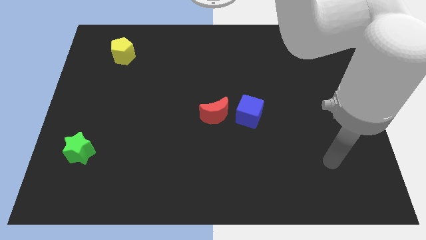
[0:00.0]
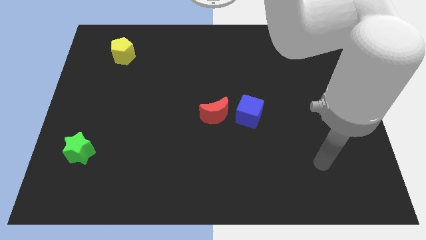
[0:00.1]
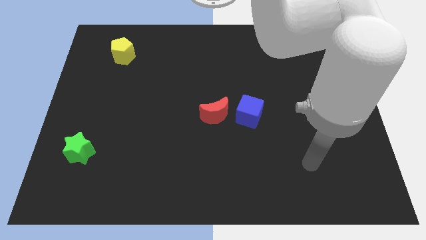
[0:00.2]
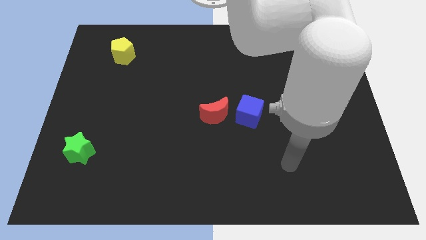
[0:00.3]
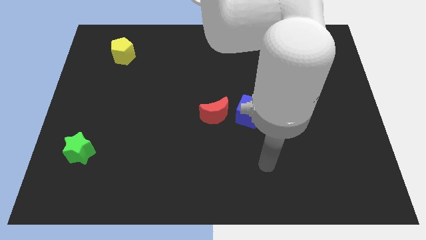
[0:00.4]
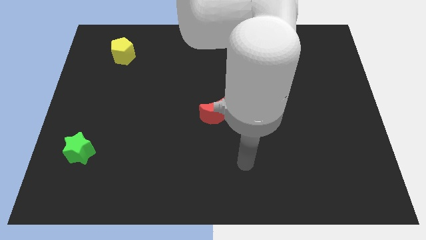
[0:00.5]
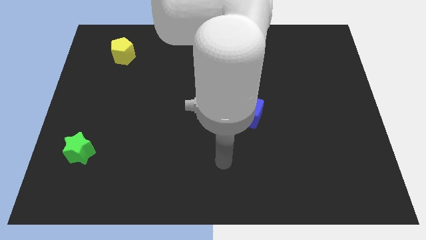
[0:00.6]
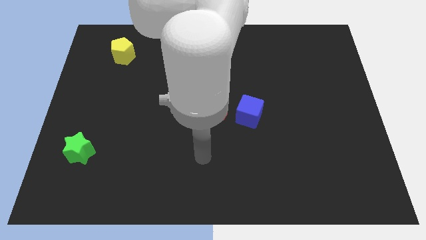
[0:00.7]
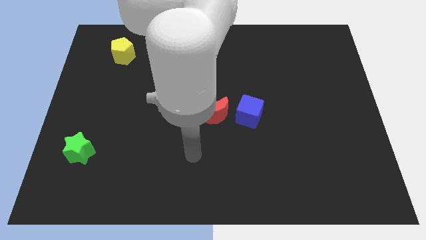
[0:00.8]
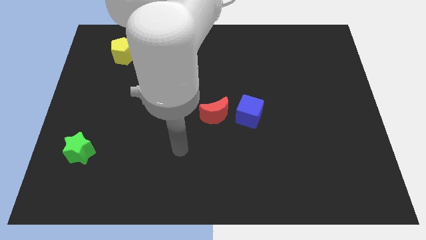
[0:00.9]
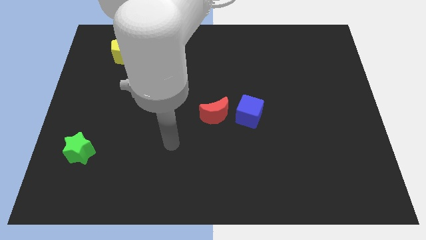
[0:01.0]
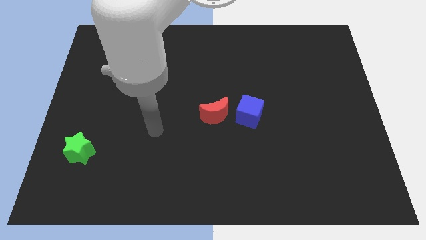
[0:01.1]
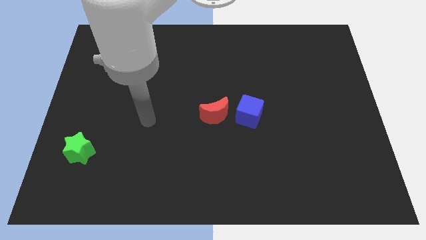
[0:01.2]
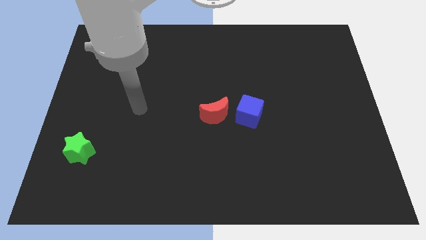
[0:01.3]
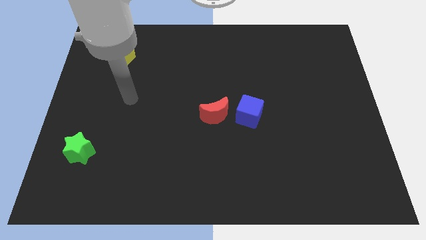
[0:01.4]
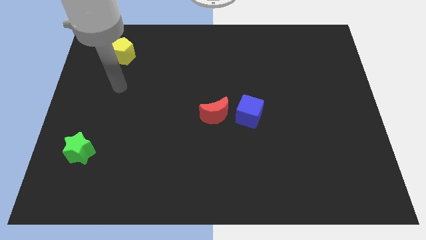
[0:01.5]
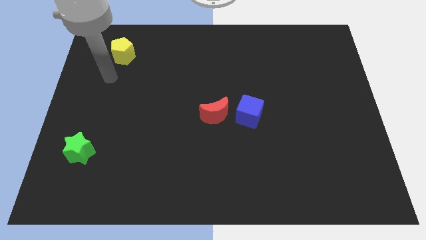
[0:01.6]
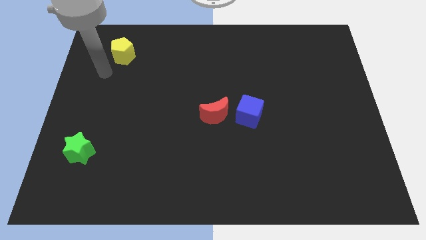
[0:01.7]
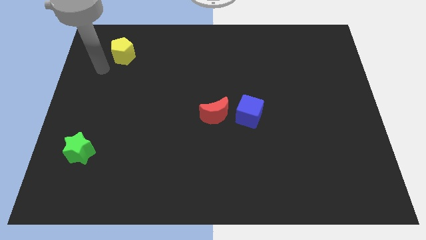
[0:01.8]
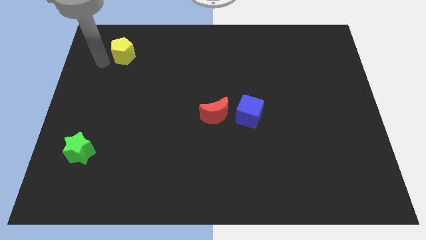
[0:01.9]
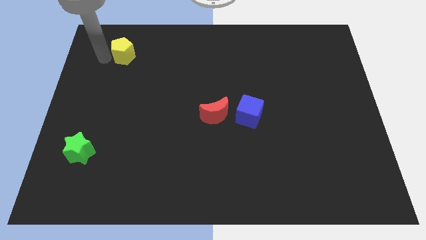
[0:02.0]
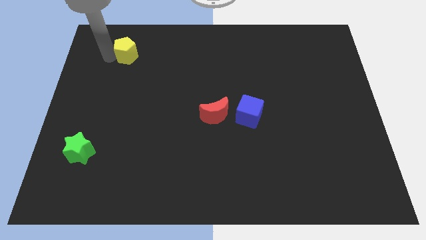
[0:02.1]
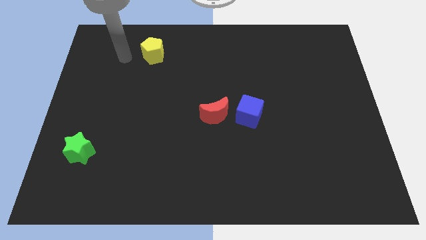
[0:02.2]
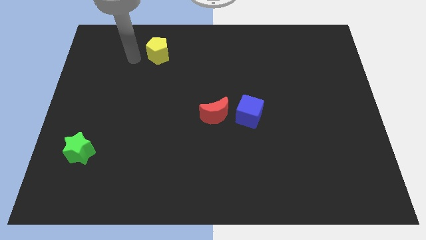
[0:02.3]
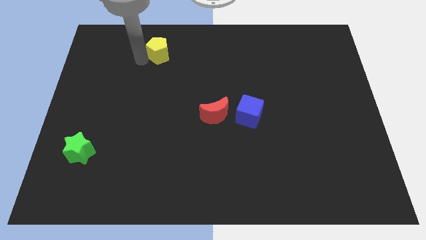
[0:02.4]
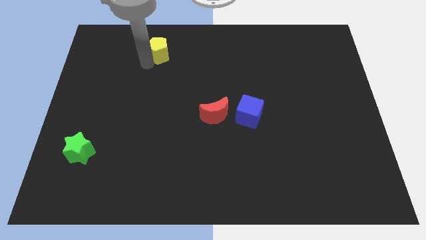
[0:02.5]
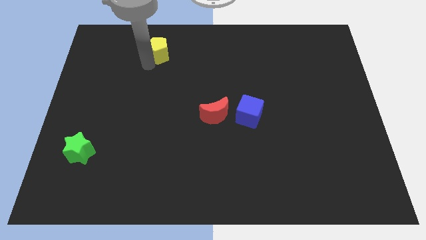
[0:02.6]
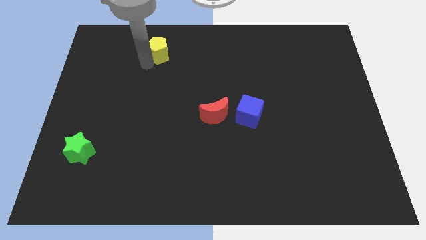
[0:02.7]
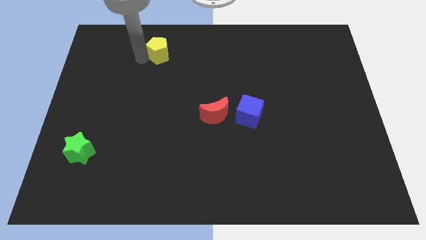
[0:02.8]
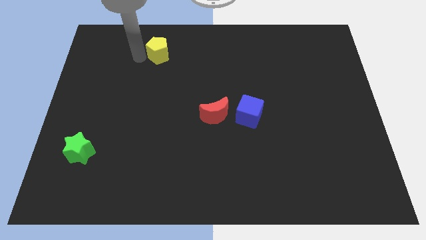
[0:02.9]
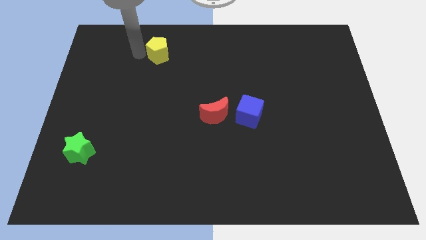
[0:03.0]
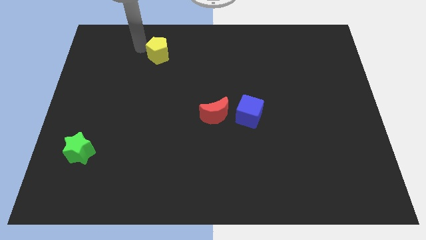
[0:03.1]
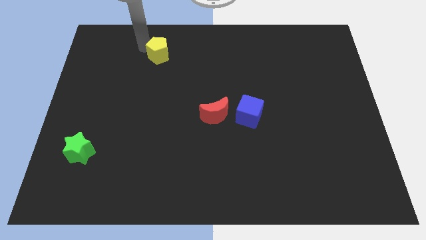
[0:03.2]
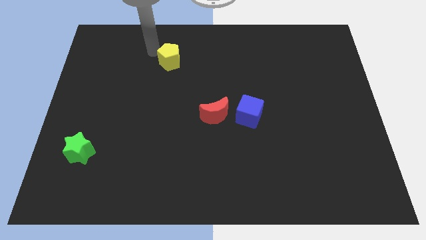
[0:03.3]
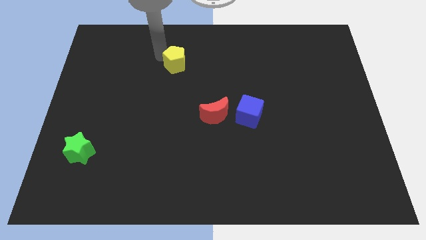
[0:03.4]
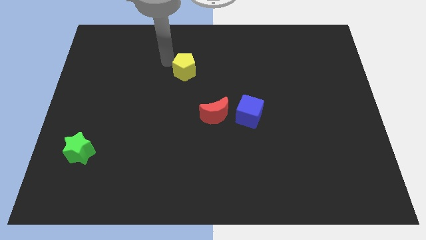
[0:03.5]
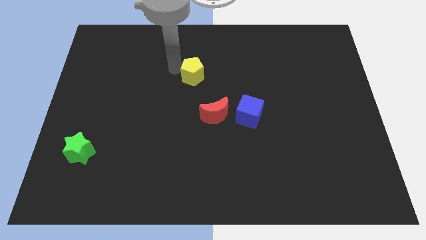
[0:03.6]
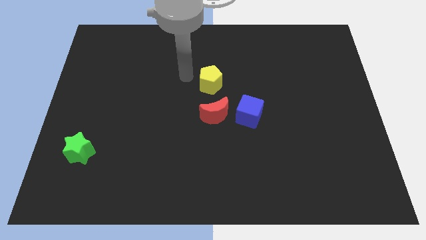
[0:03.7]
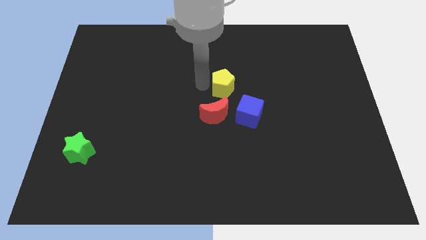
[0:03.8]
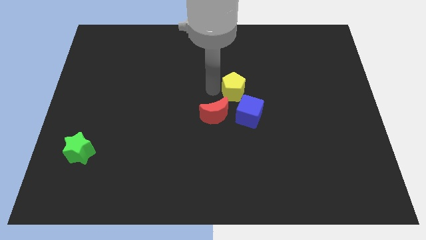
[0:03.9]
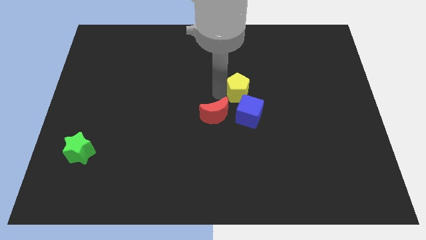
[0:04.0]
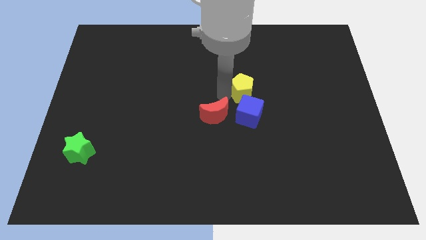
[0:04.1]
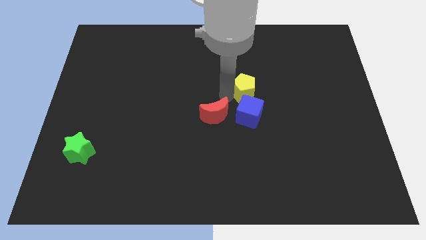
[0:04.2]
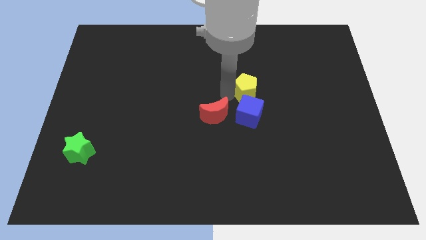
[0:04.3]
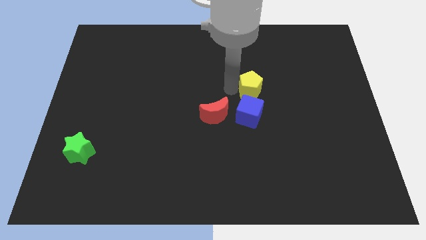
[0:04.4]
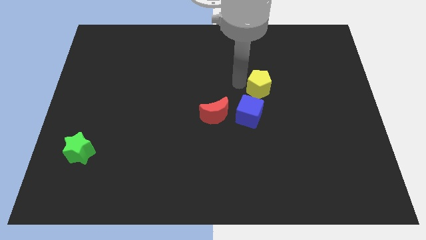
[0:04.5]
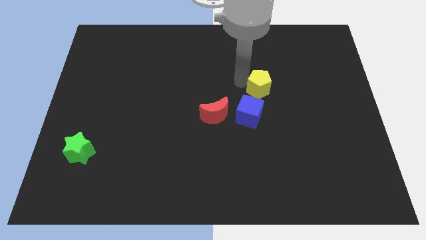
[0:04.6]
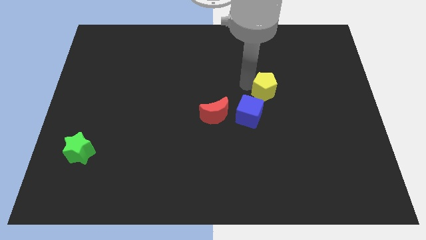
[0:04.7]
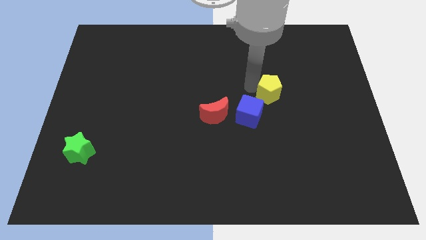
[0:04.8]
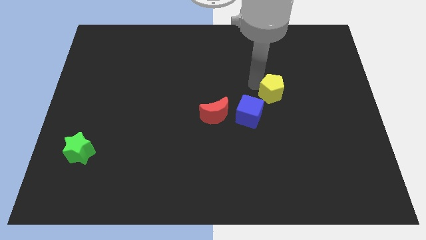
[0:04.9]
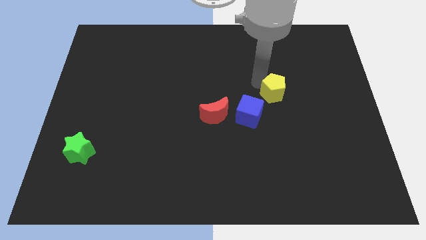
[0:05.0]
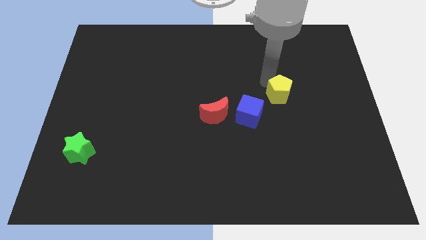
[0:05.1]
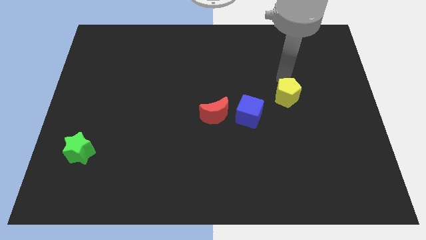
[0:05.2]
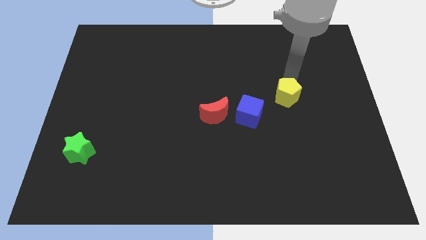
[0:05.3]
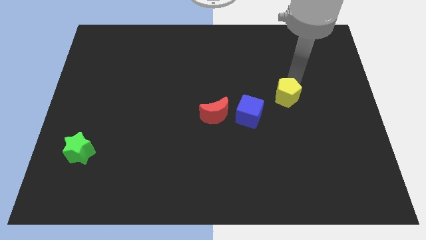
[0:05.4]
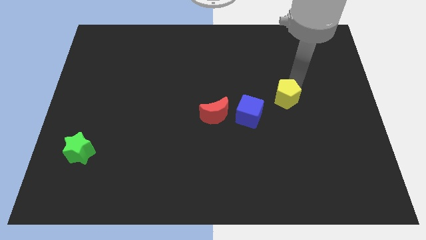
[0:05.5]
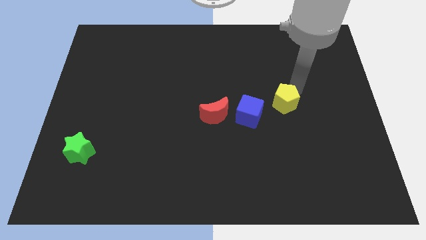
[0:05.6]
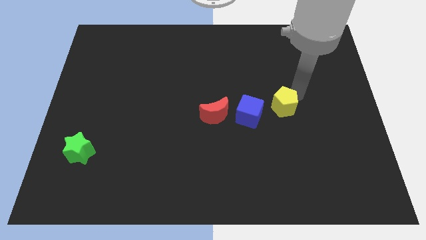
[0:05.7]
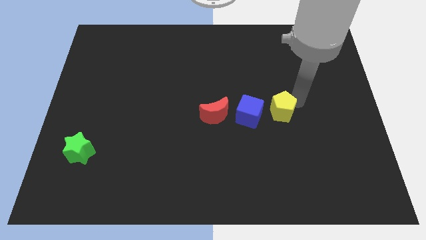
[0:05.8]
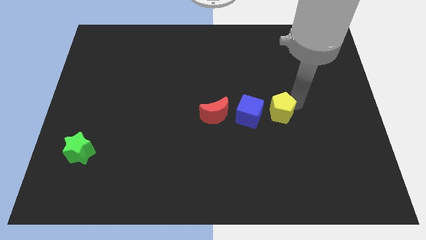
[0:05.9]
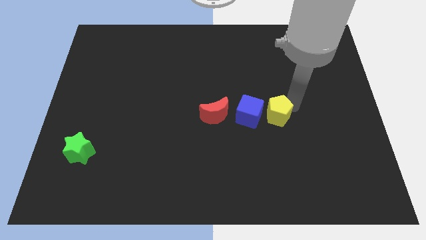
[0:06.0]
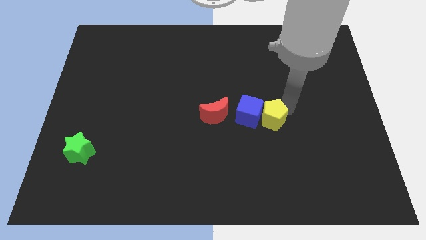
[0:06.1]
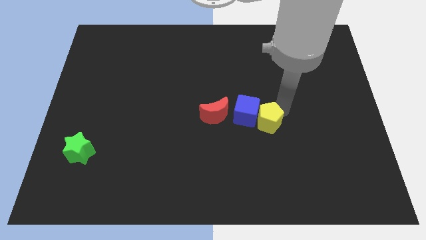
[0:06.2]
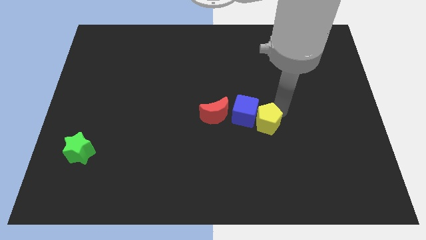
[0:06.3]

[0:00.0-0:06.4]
slide the yellow block next to the cube

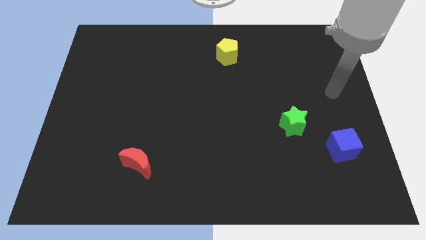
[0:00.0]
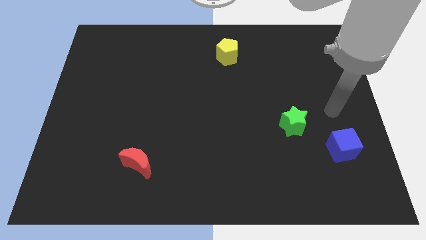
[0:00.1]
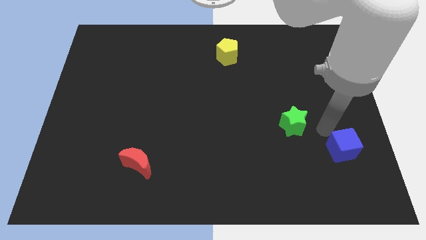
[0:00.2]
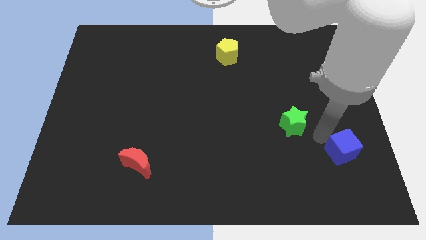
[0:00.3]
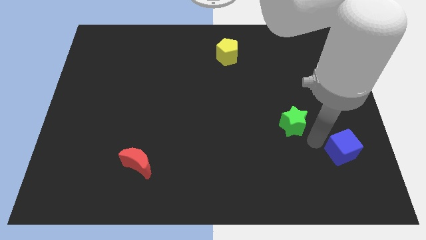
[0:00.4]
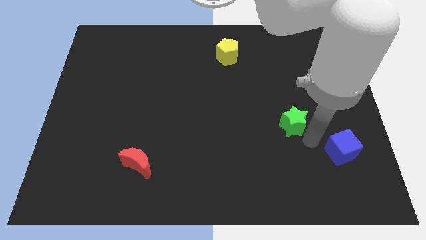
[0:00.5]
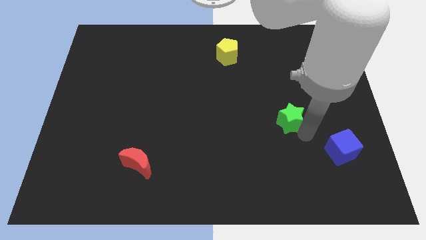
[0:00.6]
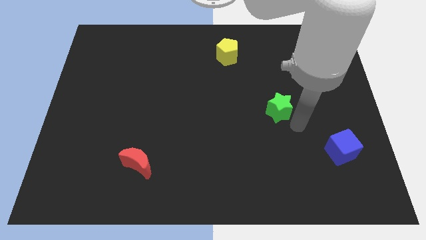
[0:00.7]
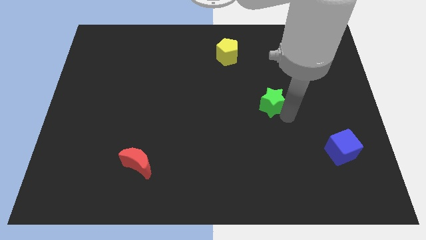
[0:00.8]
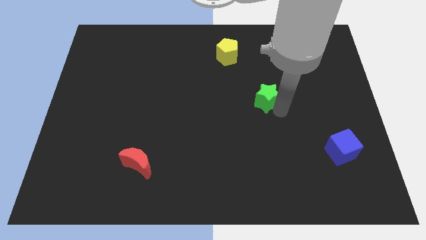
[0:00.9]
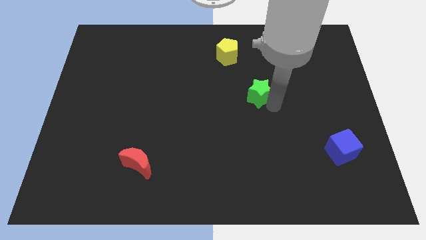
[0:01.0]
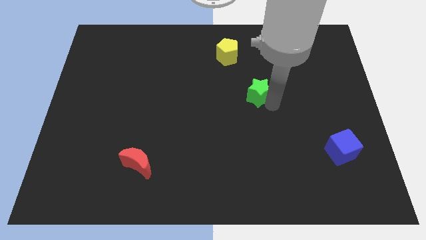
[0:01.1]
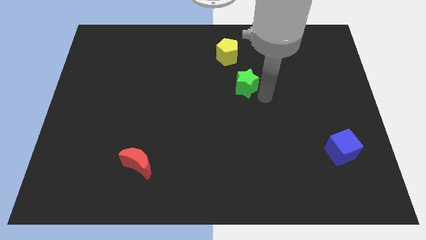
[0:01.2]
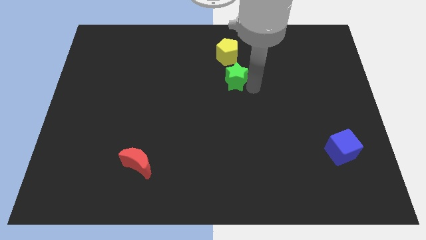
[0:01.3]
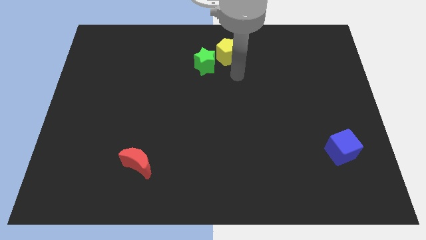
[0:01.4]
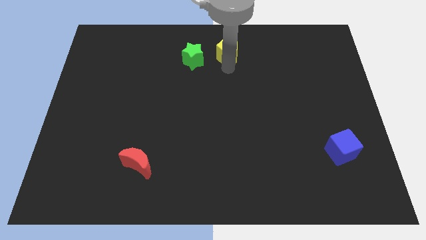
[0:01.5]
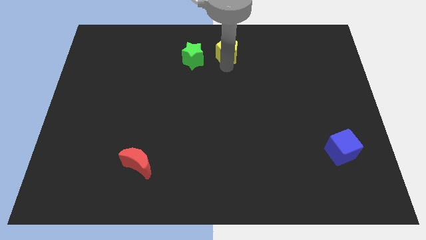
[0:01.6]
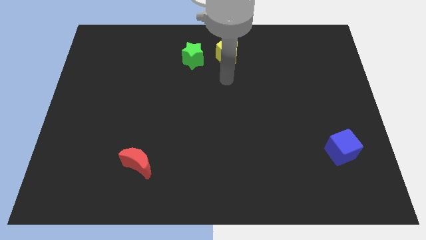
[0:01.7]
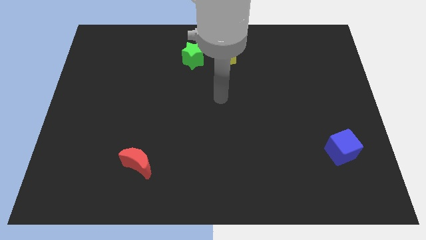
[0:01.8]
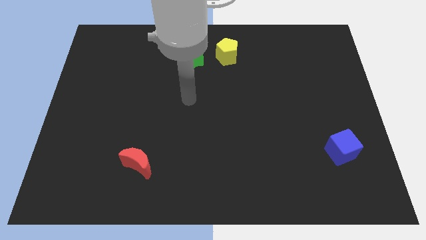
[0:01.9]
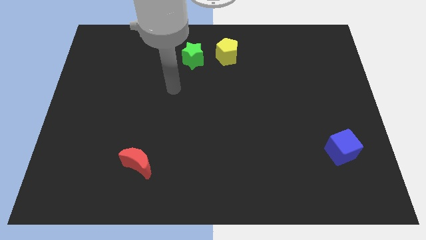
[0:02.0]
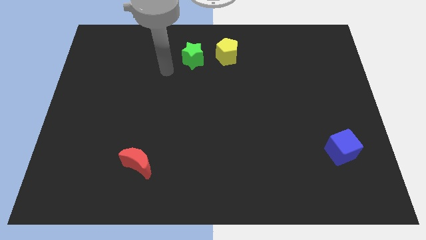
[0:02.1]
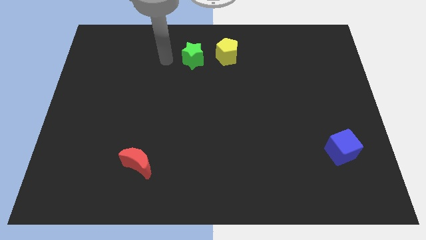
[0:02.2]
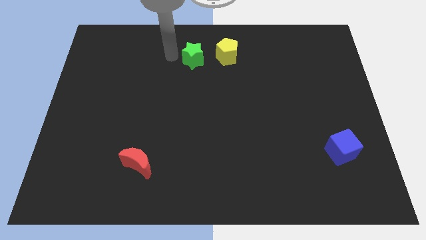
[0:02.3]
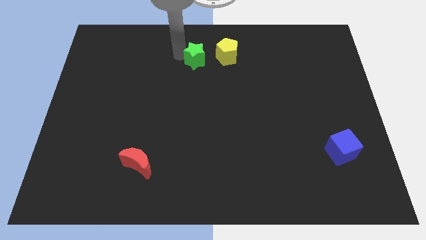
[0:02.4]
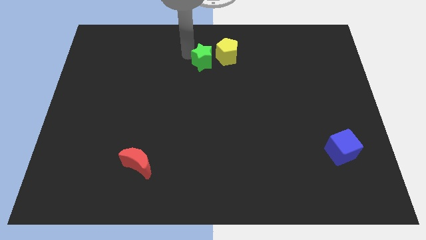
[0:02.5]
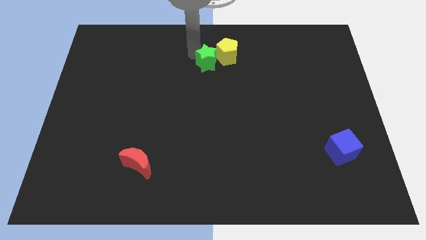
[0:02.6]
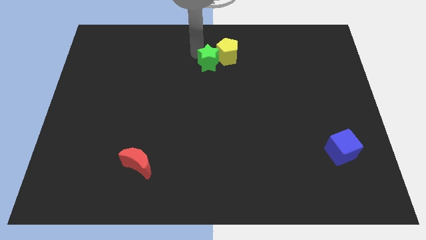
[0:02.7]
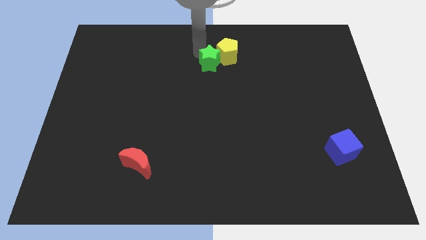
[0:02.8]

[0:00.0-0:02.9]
move the star next to the yellow pentagon
